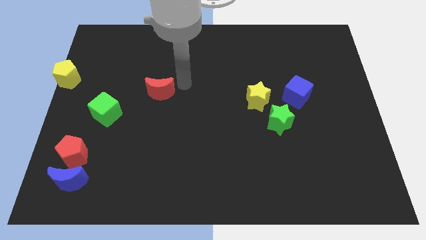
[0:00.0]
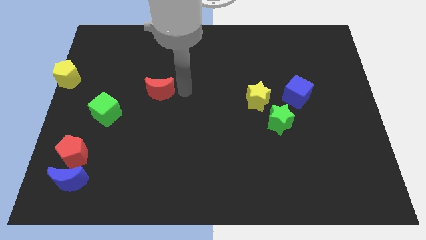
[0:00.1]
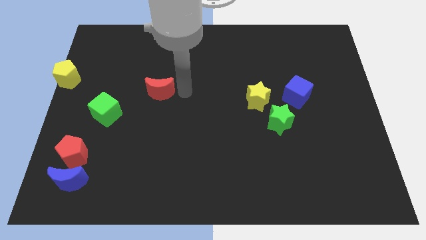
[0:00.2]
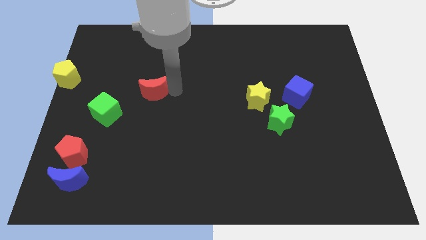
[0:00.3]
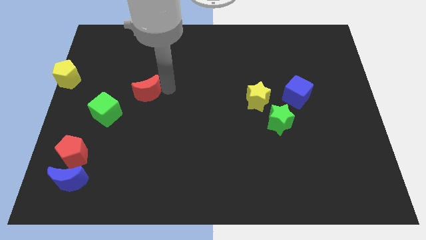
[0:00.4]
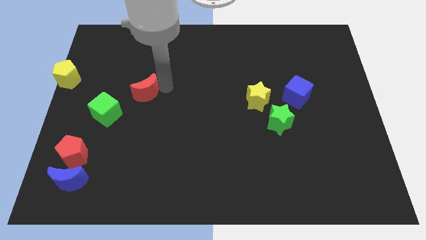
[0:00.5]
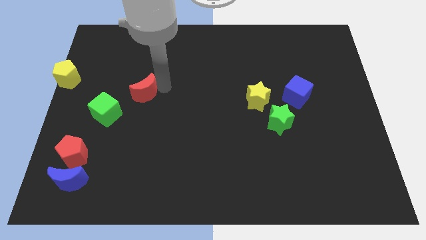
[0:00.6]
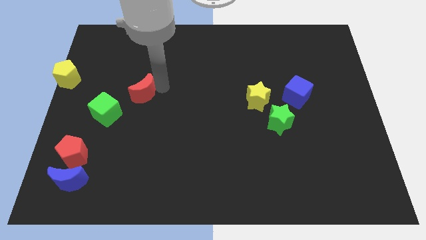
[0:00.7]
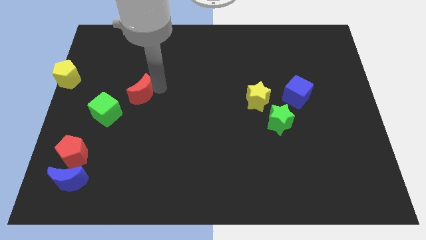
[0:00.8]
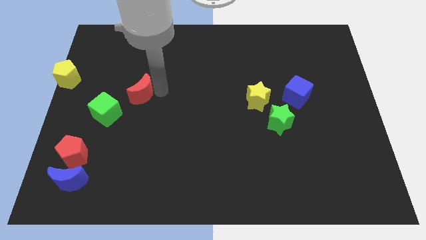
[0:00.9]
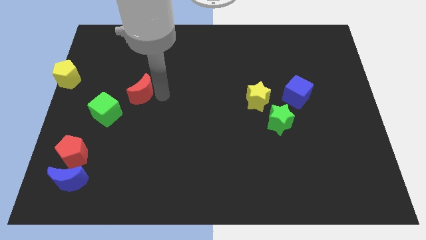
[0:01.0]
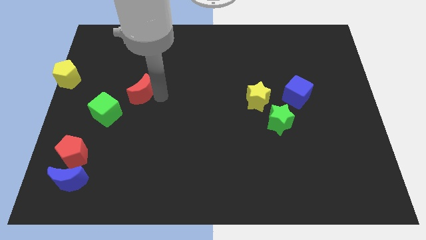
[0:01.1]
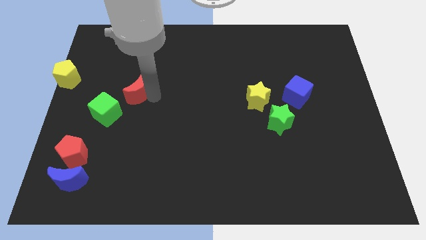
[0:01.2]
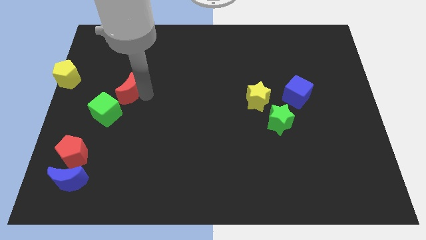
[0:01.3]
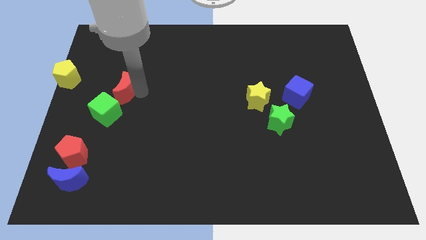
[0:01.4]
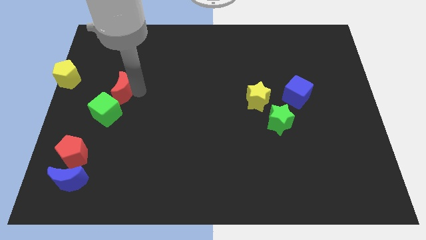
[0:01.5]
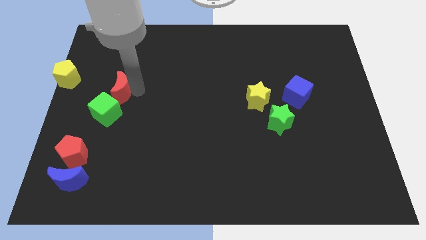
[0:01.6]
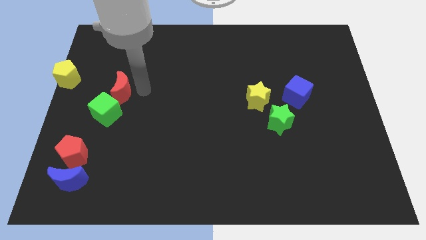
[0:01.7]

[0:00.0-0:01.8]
push the red crescent to the top of the green cube

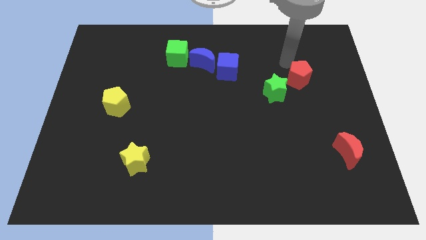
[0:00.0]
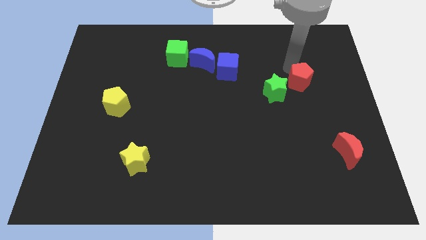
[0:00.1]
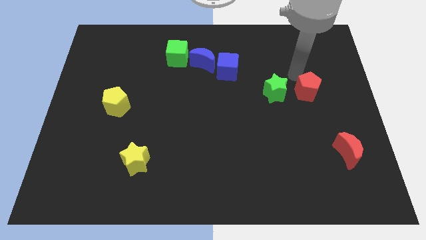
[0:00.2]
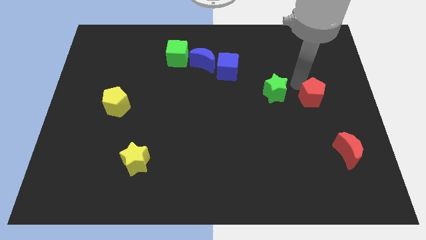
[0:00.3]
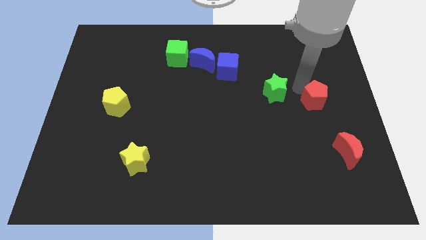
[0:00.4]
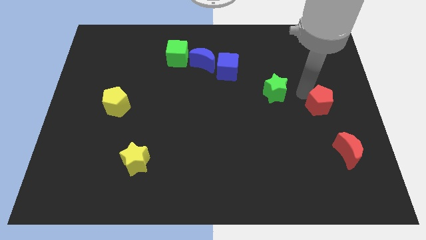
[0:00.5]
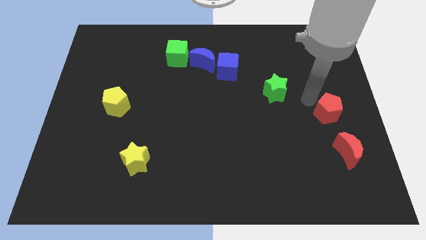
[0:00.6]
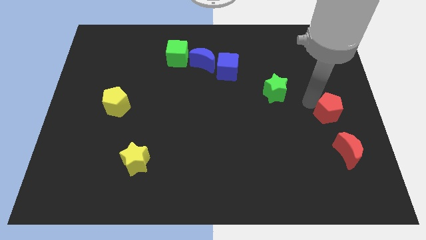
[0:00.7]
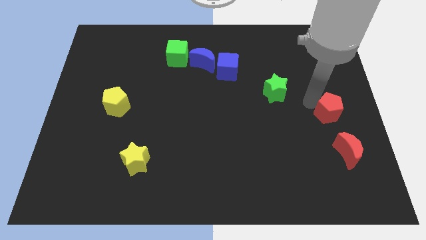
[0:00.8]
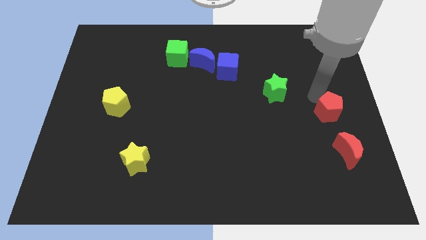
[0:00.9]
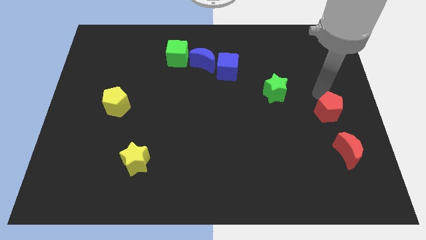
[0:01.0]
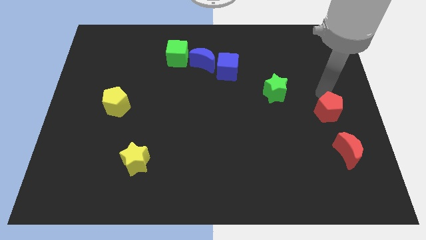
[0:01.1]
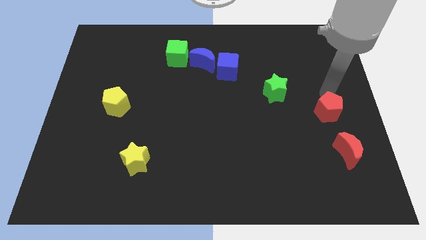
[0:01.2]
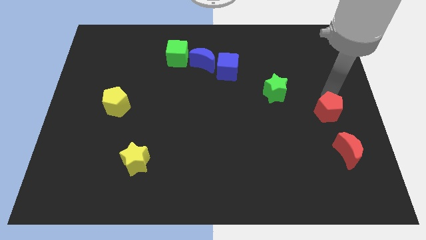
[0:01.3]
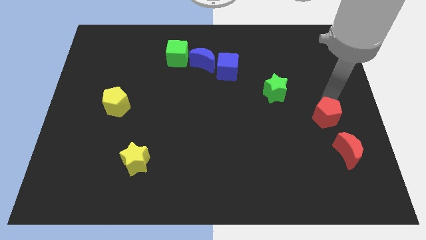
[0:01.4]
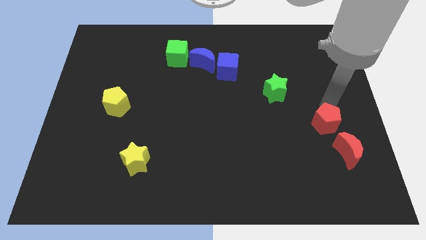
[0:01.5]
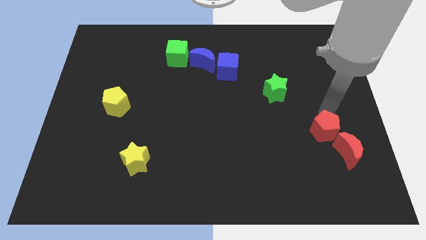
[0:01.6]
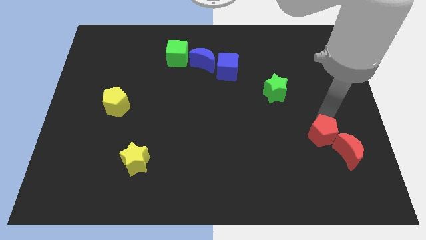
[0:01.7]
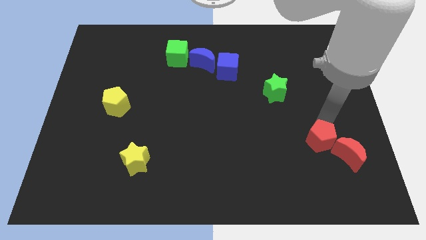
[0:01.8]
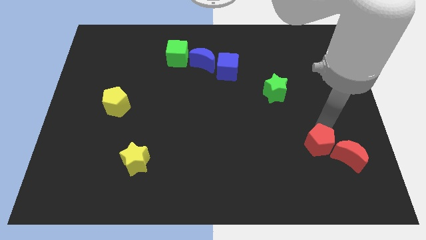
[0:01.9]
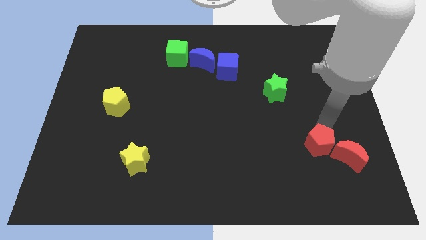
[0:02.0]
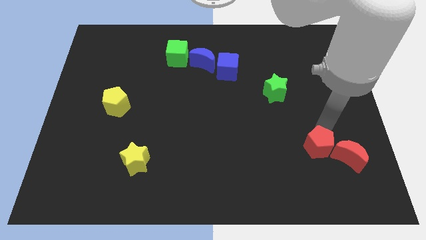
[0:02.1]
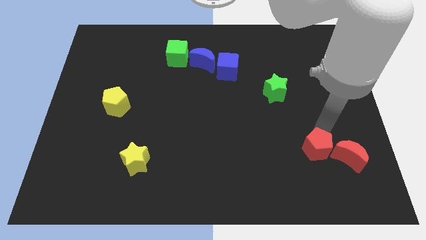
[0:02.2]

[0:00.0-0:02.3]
make the red pentagon to touch the red crescent

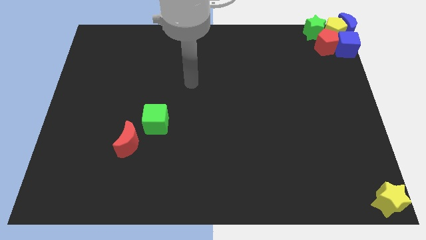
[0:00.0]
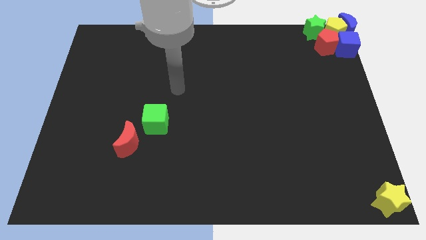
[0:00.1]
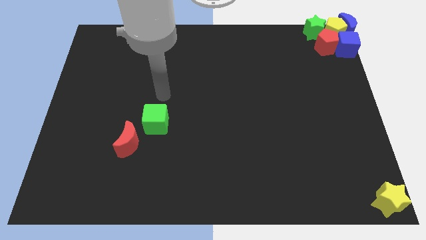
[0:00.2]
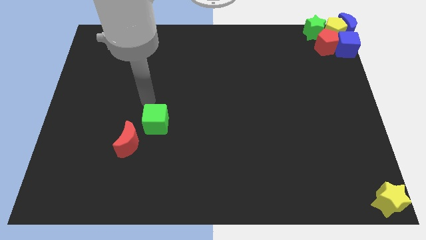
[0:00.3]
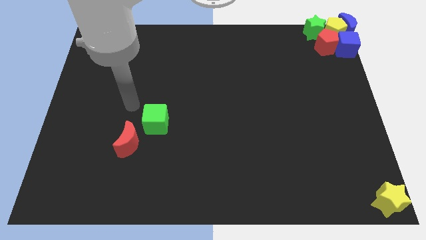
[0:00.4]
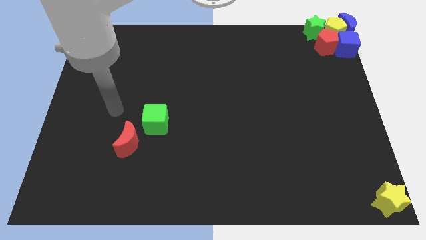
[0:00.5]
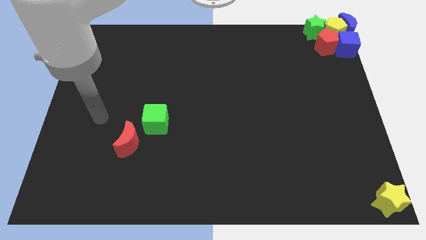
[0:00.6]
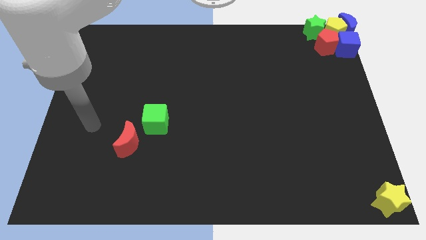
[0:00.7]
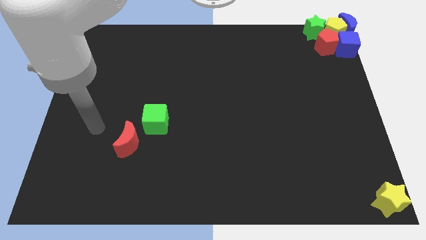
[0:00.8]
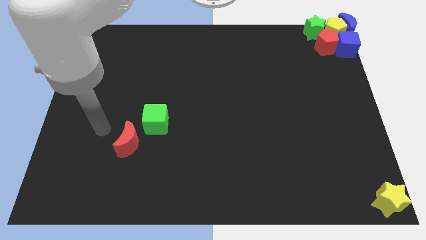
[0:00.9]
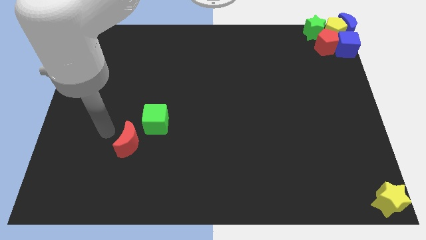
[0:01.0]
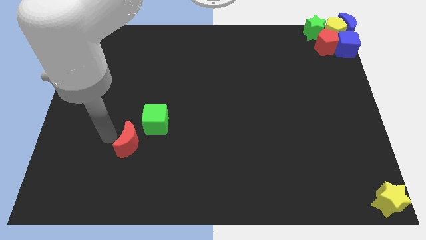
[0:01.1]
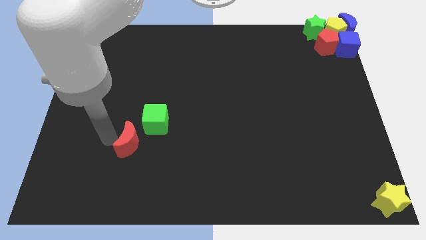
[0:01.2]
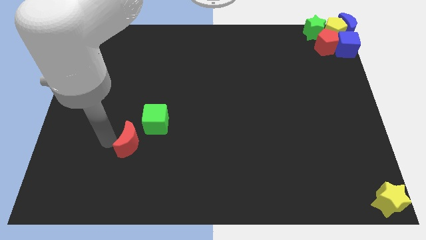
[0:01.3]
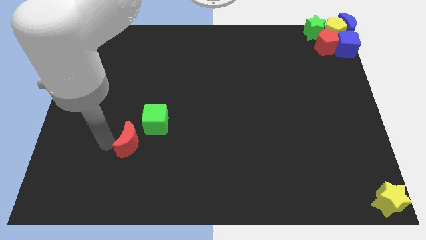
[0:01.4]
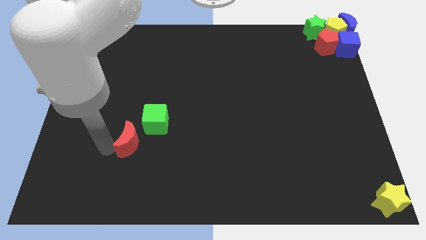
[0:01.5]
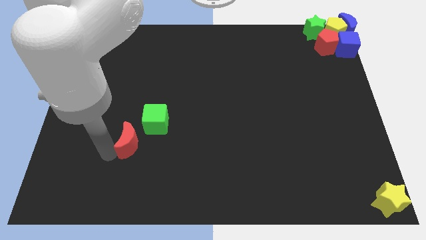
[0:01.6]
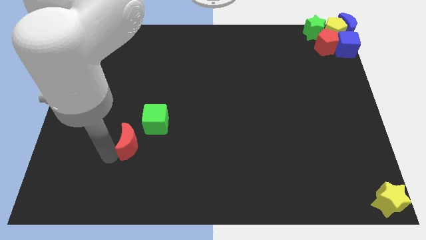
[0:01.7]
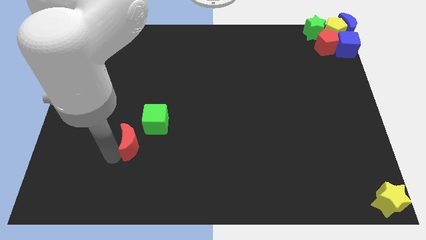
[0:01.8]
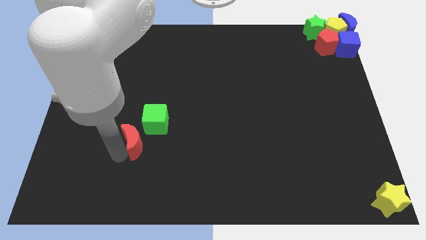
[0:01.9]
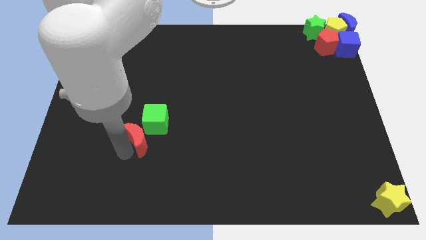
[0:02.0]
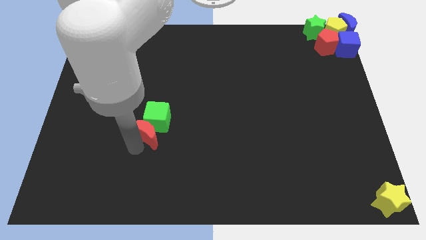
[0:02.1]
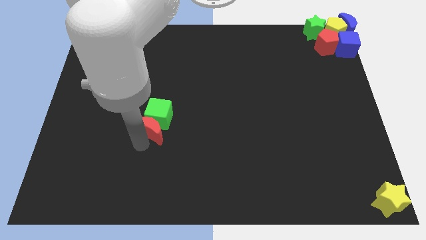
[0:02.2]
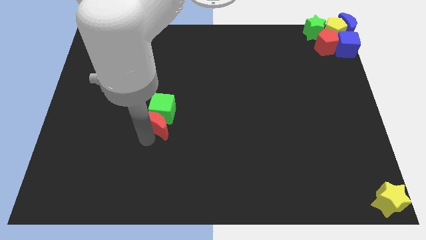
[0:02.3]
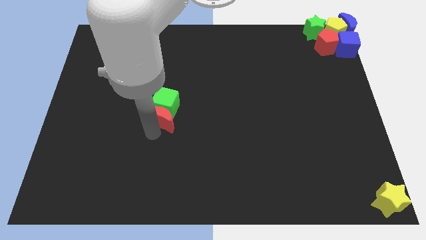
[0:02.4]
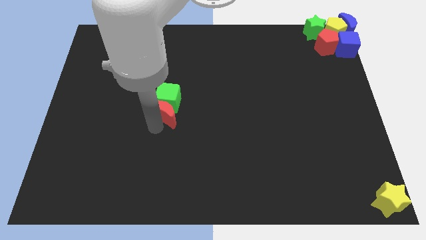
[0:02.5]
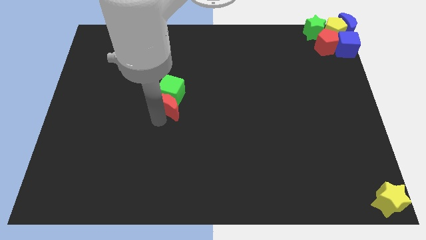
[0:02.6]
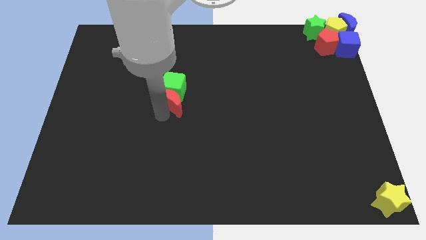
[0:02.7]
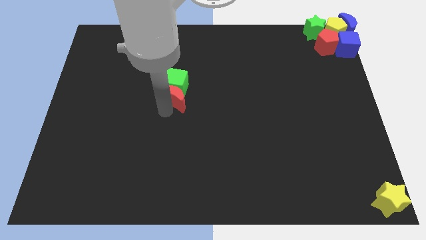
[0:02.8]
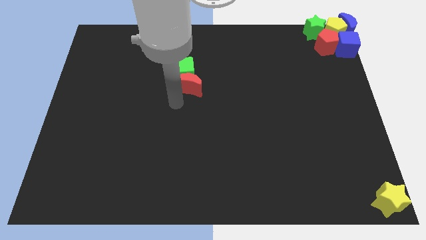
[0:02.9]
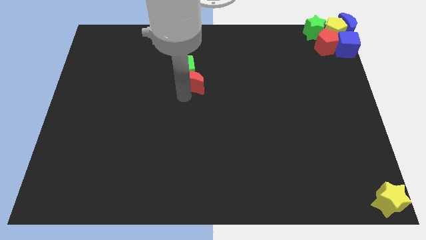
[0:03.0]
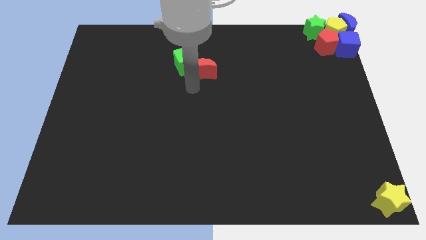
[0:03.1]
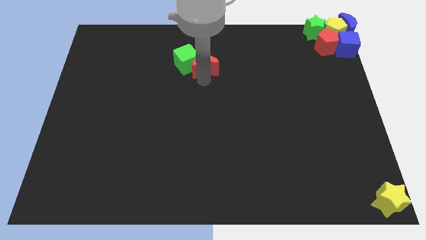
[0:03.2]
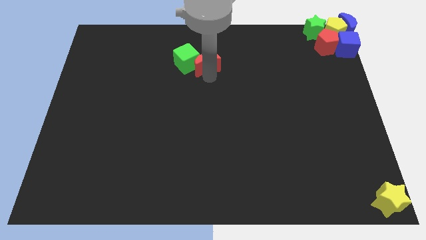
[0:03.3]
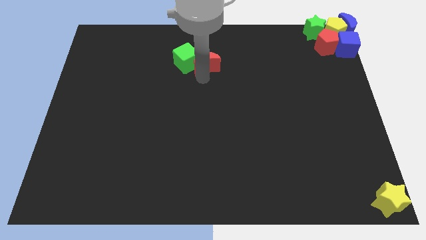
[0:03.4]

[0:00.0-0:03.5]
push the green cube along with the red crescent towards the top center

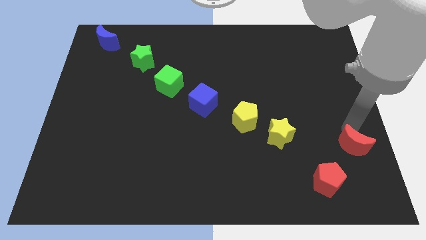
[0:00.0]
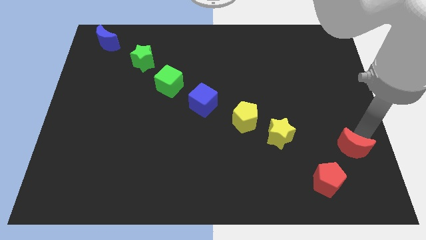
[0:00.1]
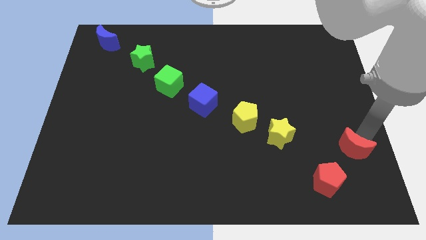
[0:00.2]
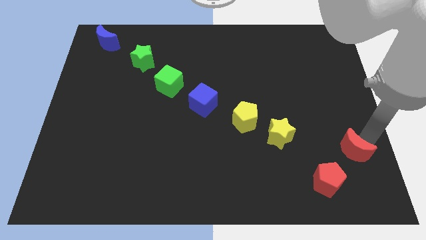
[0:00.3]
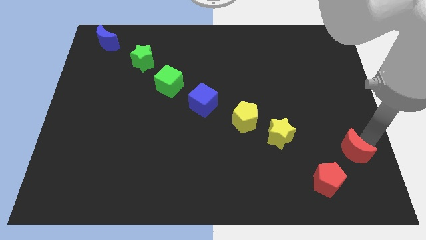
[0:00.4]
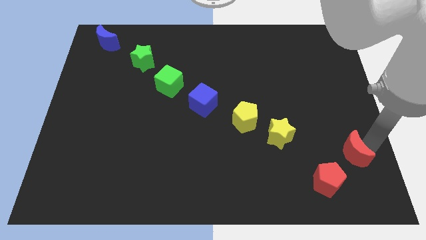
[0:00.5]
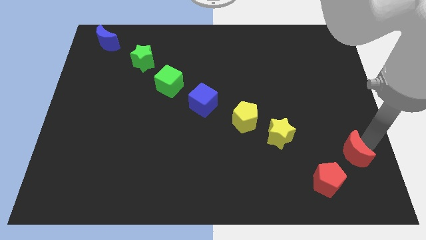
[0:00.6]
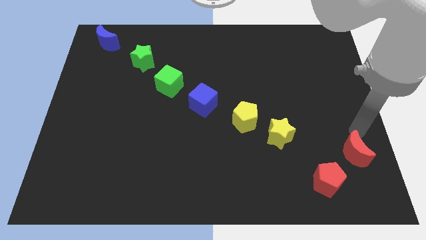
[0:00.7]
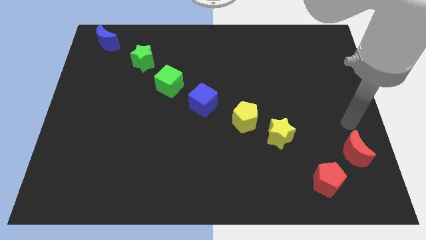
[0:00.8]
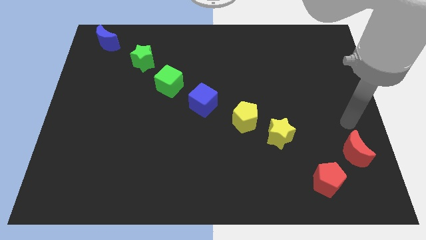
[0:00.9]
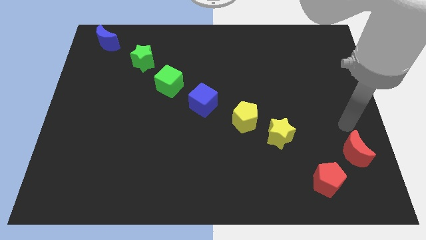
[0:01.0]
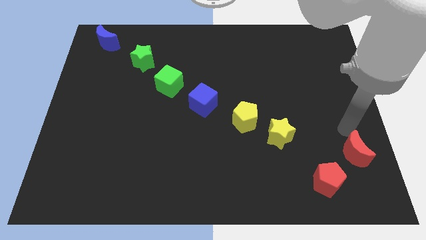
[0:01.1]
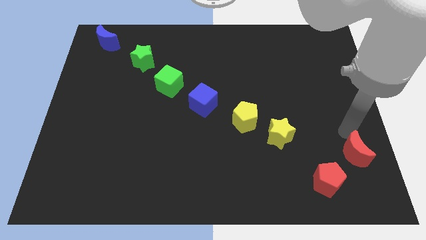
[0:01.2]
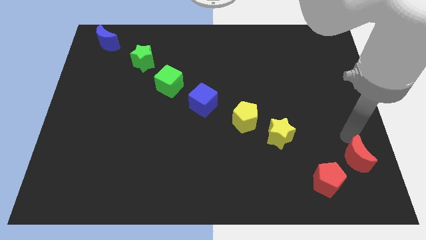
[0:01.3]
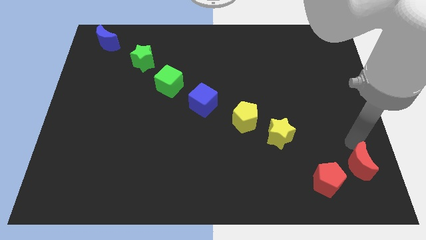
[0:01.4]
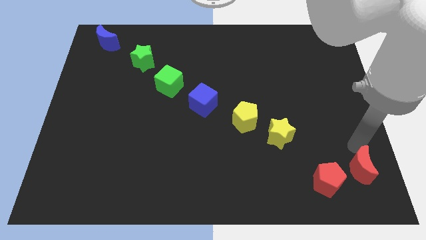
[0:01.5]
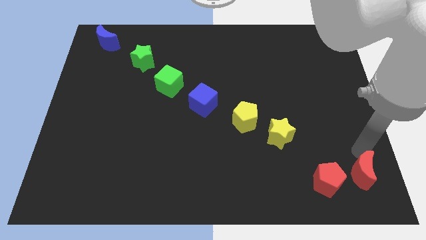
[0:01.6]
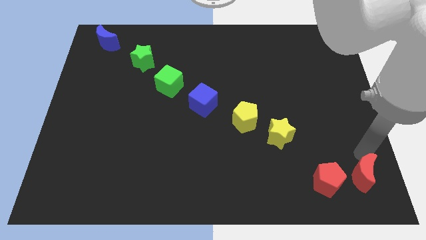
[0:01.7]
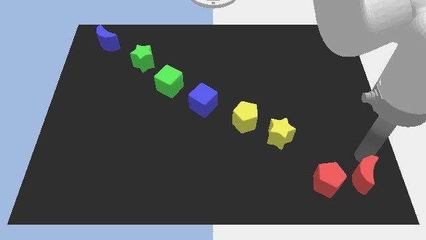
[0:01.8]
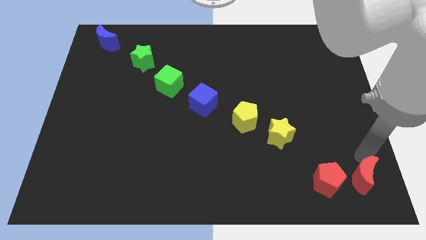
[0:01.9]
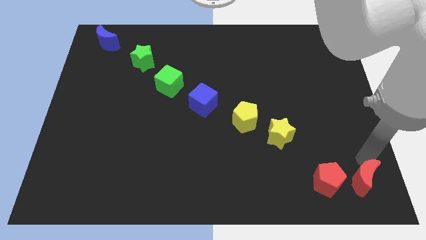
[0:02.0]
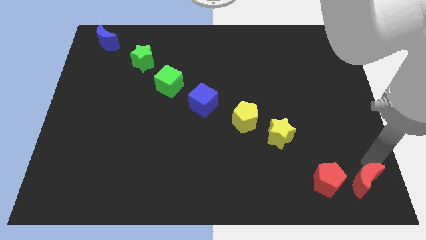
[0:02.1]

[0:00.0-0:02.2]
place the red crescent at right side of the red pentagon
